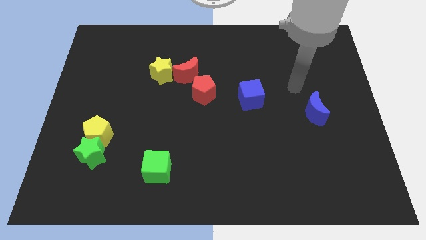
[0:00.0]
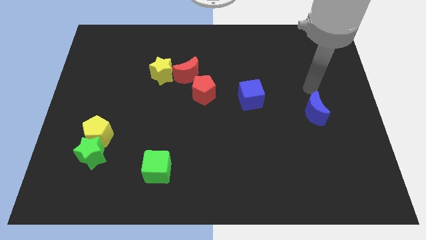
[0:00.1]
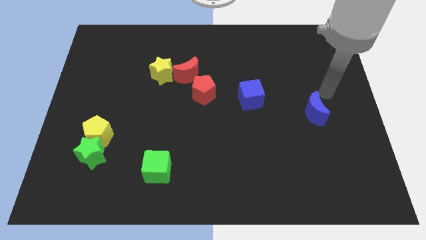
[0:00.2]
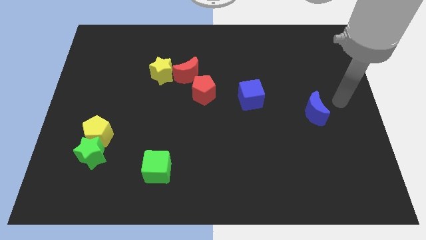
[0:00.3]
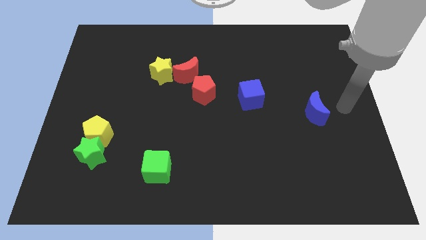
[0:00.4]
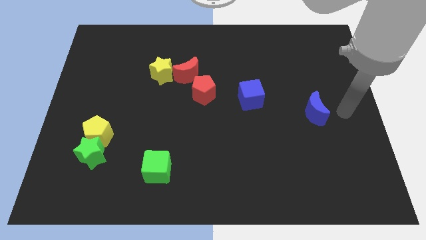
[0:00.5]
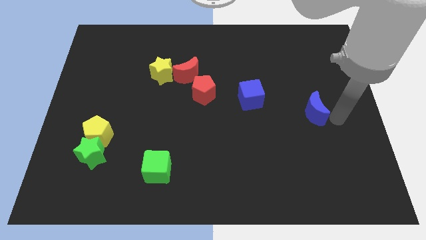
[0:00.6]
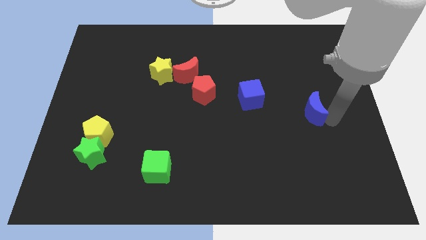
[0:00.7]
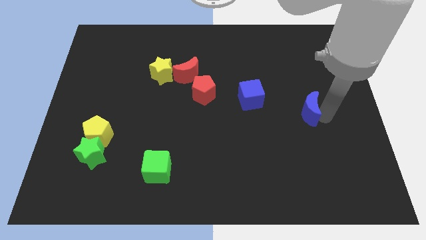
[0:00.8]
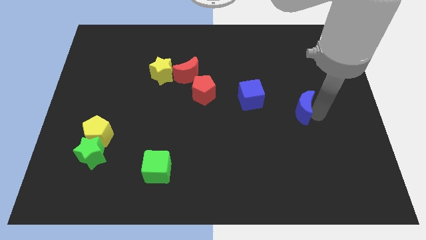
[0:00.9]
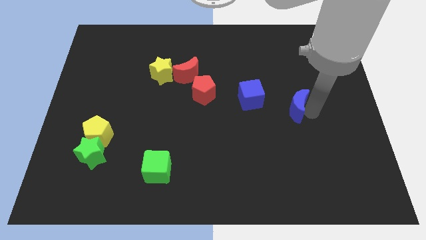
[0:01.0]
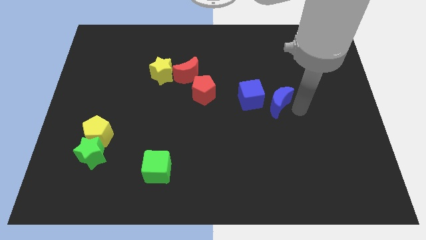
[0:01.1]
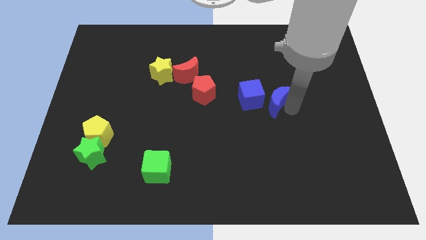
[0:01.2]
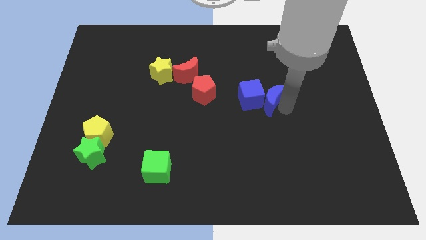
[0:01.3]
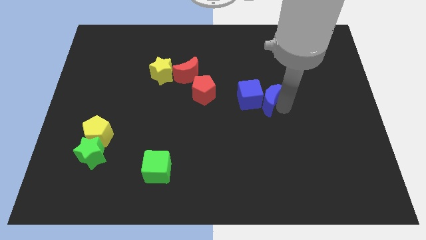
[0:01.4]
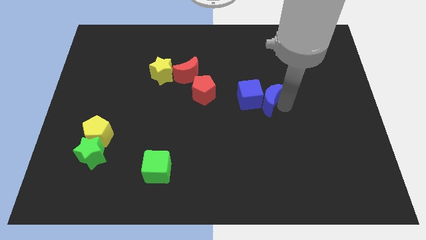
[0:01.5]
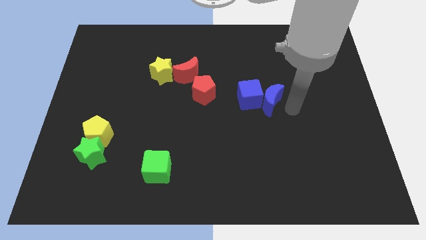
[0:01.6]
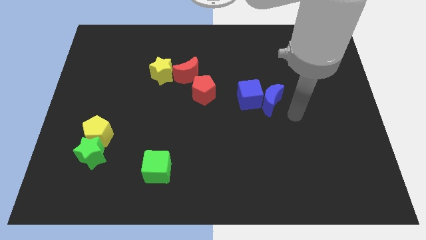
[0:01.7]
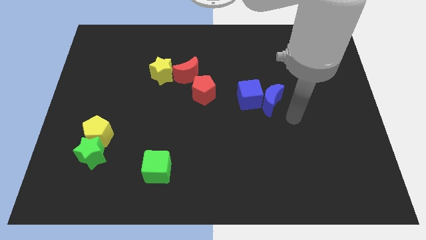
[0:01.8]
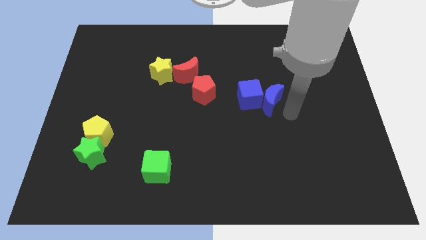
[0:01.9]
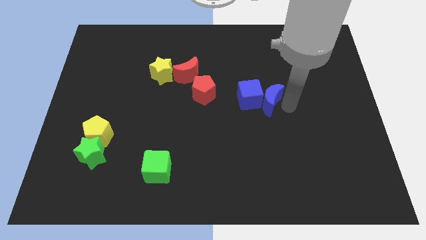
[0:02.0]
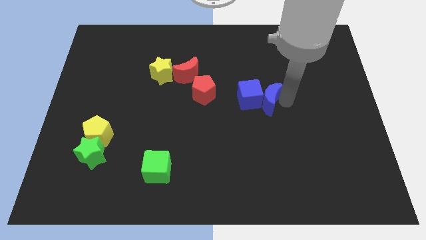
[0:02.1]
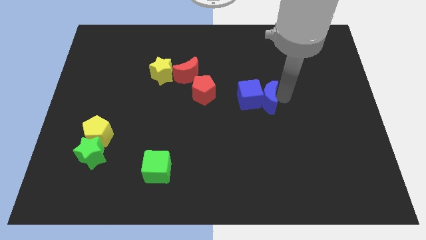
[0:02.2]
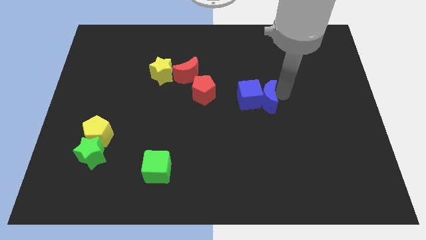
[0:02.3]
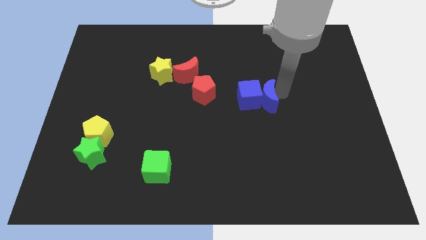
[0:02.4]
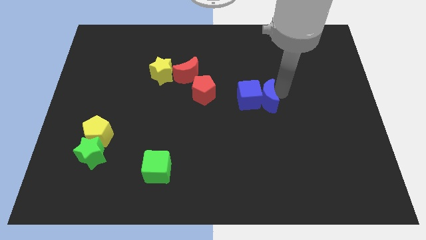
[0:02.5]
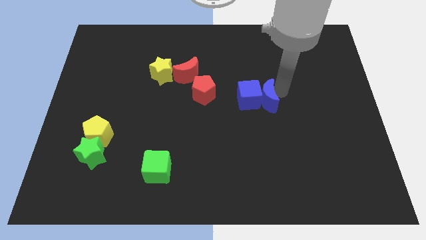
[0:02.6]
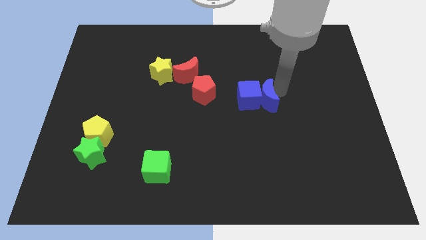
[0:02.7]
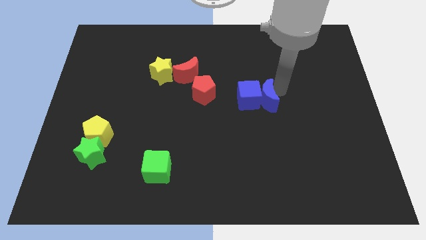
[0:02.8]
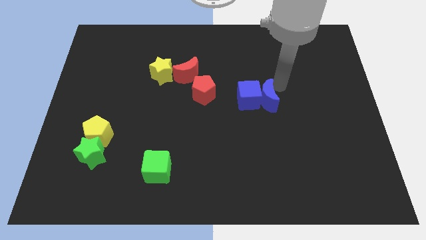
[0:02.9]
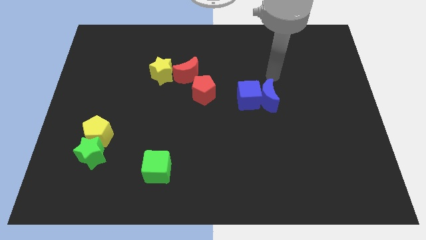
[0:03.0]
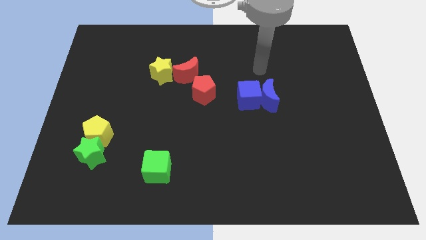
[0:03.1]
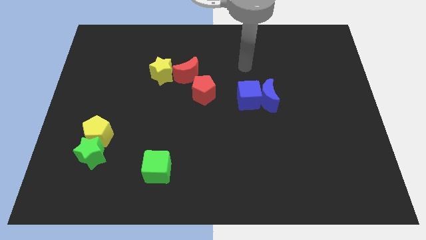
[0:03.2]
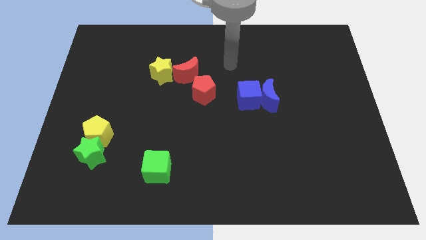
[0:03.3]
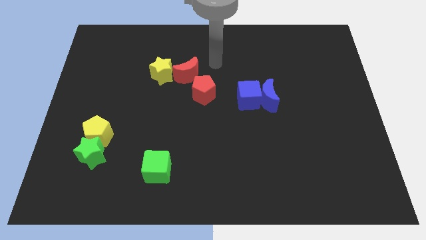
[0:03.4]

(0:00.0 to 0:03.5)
push the blue crescent right to the blue cube

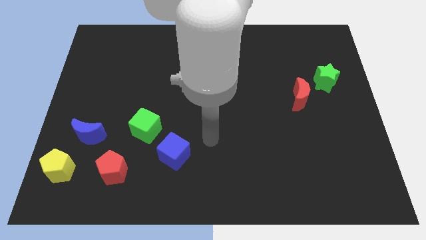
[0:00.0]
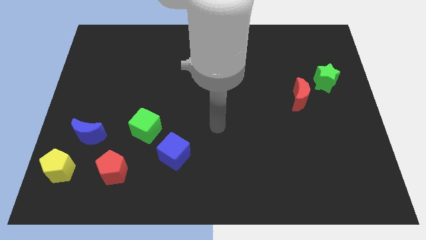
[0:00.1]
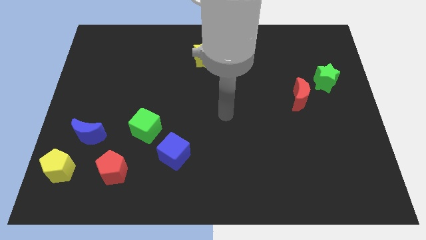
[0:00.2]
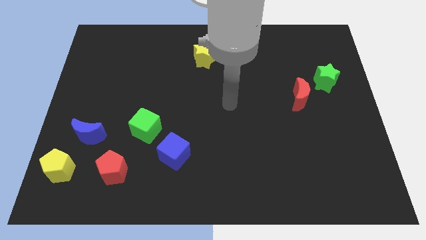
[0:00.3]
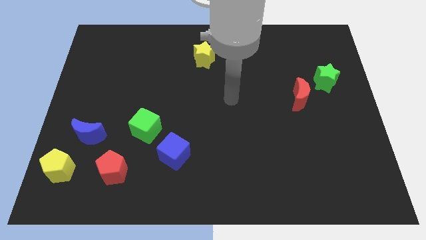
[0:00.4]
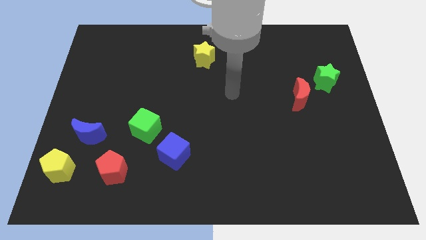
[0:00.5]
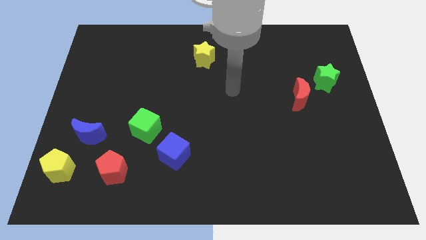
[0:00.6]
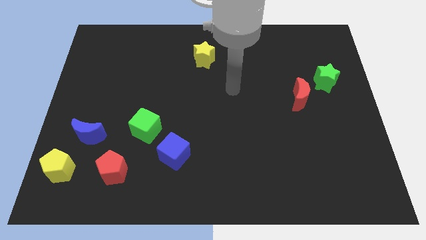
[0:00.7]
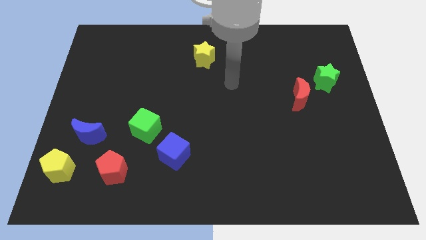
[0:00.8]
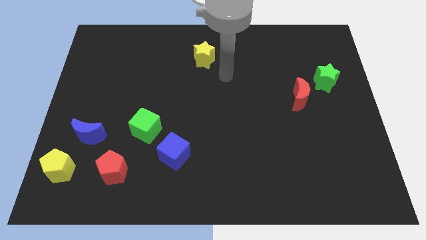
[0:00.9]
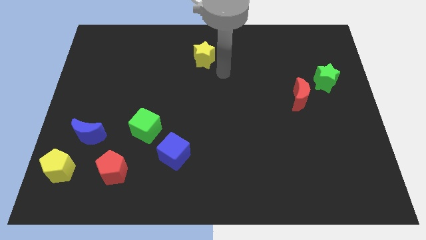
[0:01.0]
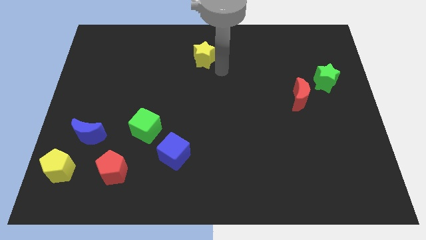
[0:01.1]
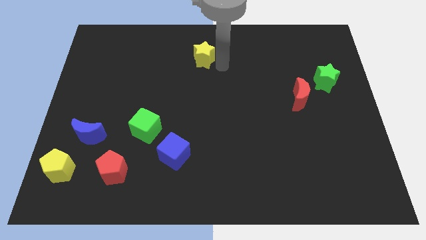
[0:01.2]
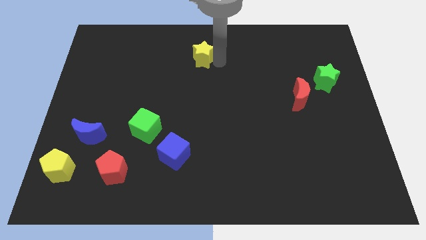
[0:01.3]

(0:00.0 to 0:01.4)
point the arm to the right of the yellow star

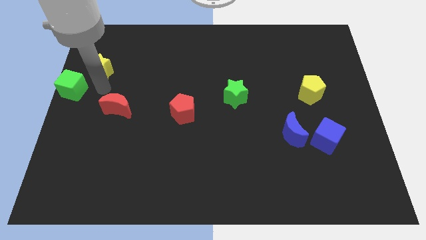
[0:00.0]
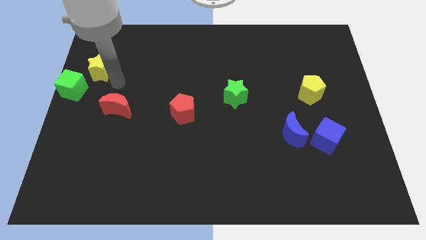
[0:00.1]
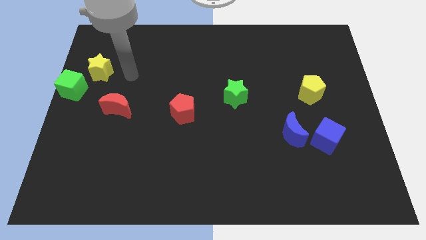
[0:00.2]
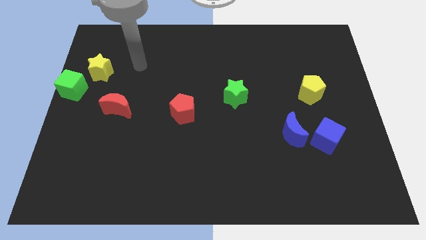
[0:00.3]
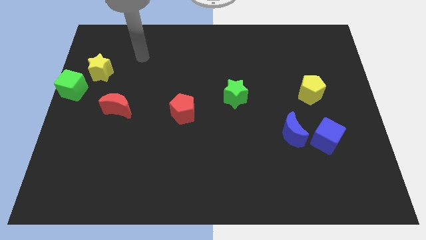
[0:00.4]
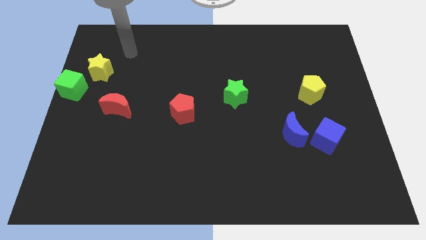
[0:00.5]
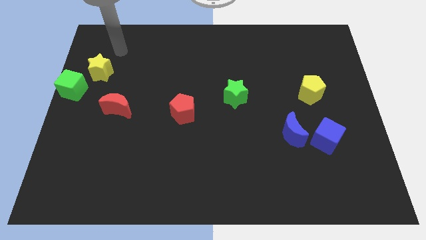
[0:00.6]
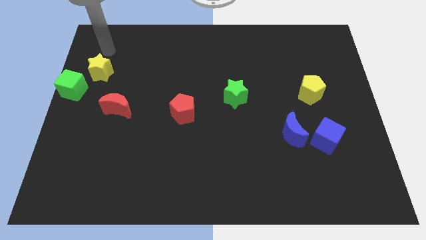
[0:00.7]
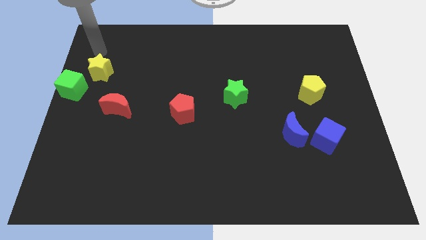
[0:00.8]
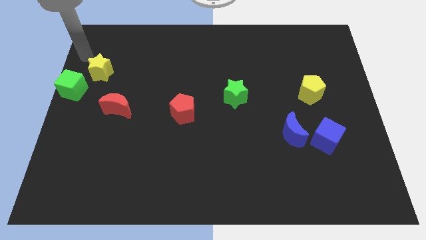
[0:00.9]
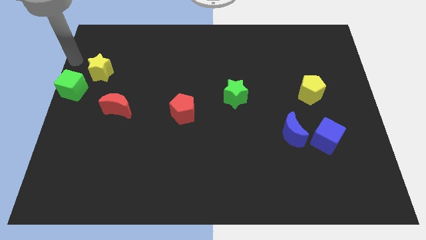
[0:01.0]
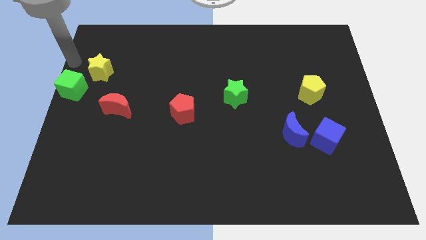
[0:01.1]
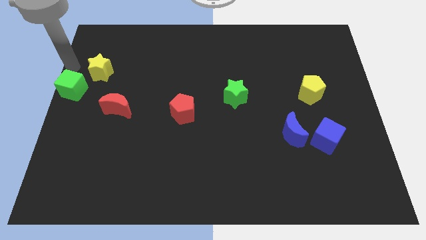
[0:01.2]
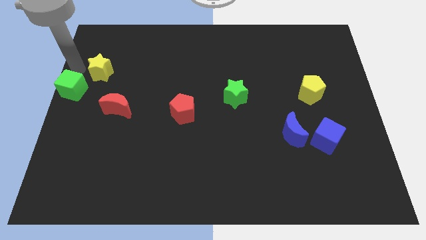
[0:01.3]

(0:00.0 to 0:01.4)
point your arm at the top of the green cube

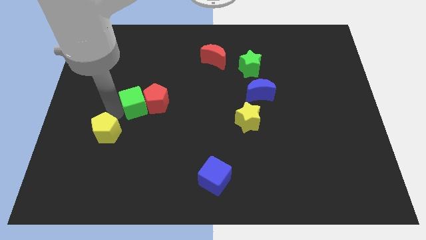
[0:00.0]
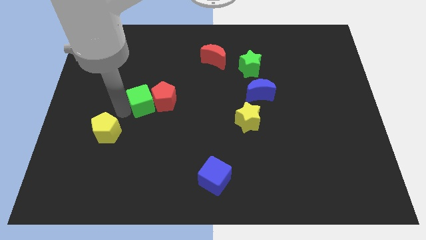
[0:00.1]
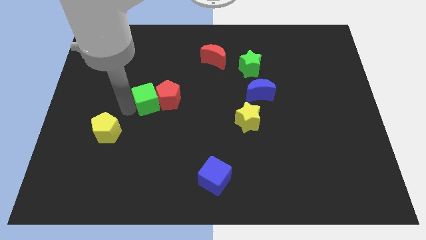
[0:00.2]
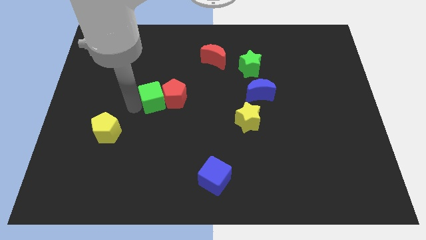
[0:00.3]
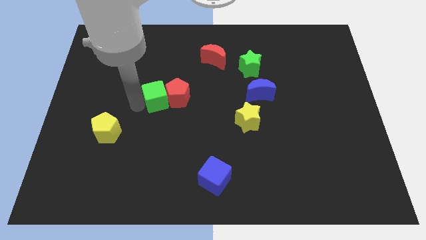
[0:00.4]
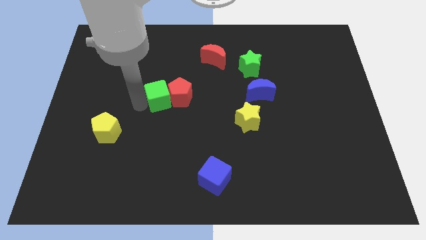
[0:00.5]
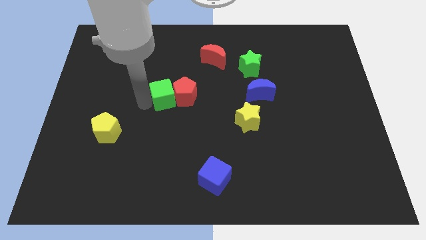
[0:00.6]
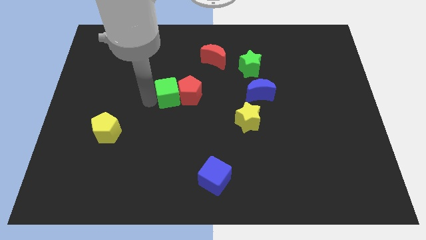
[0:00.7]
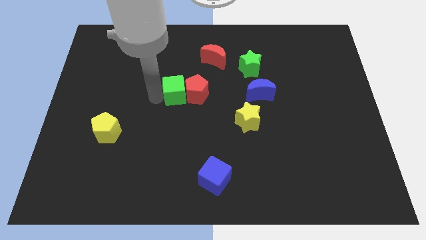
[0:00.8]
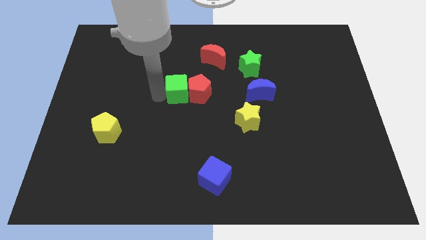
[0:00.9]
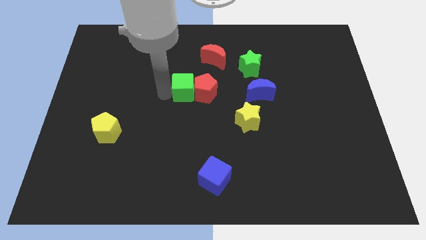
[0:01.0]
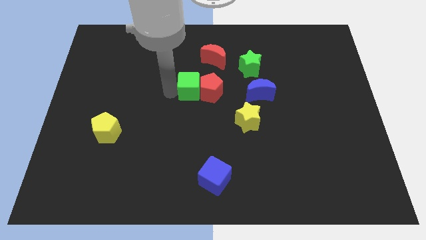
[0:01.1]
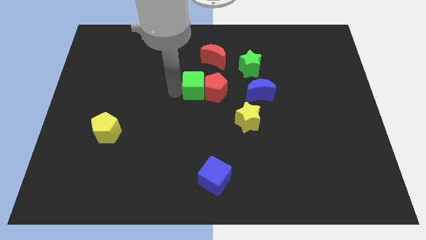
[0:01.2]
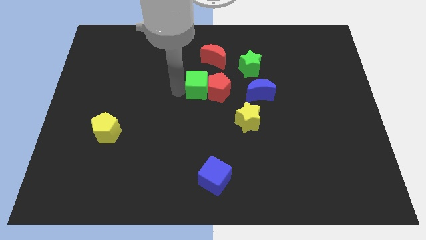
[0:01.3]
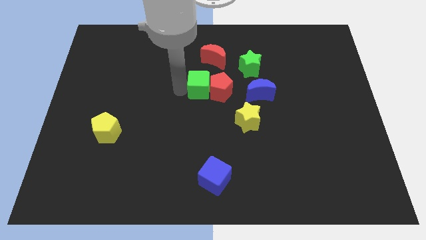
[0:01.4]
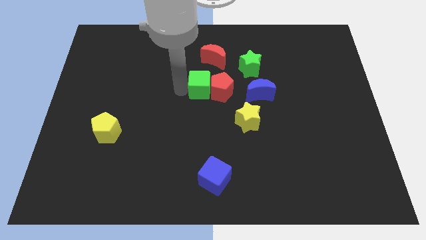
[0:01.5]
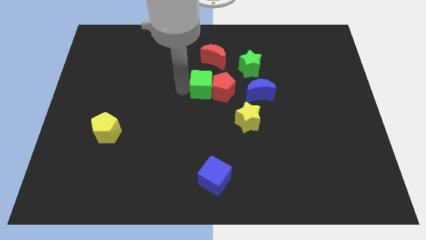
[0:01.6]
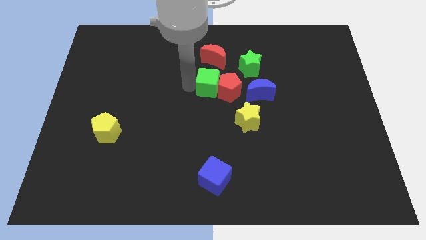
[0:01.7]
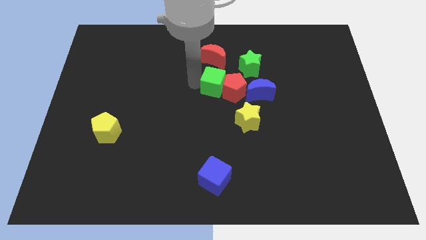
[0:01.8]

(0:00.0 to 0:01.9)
push the green cube and red pentagon towards the right

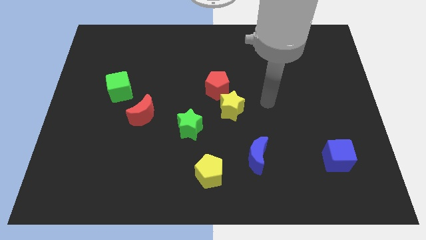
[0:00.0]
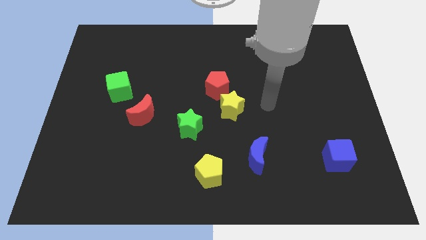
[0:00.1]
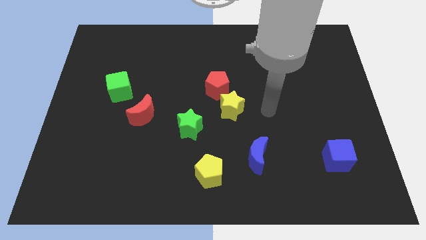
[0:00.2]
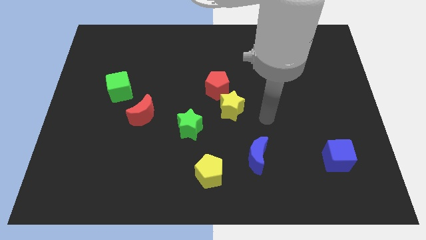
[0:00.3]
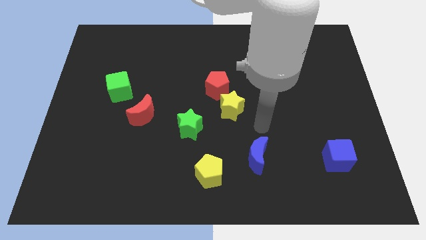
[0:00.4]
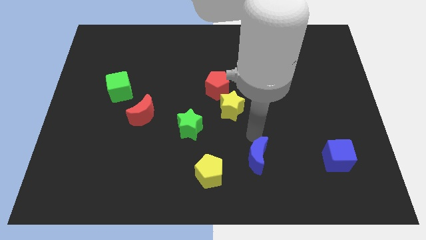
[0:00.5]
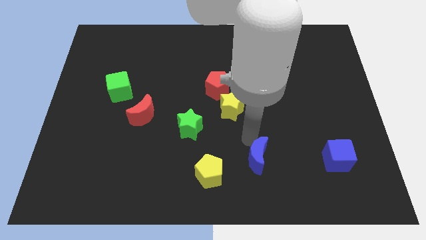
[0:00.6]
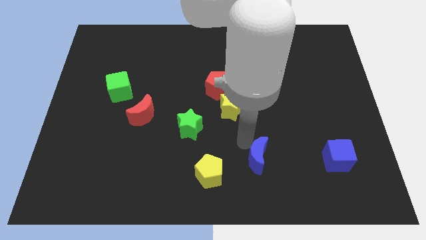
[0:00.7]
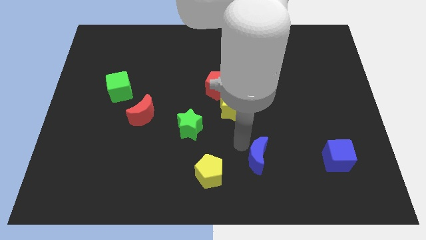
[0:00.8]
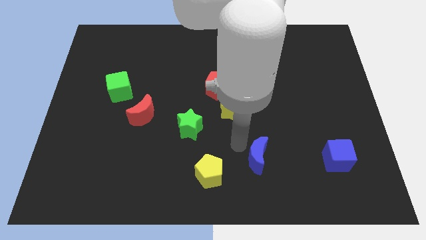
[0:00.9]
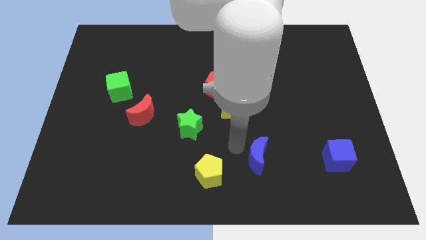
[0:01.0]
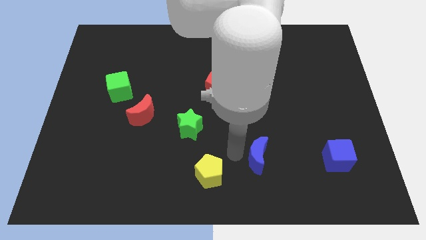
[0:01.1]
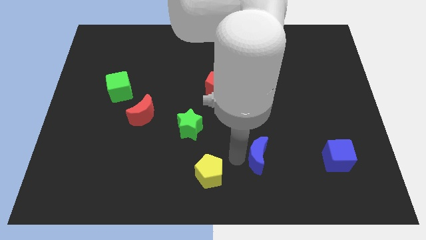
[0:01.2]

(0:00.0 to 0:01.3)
push arm in between blue moon and yellow pentagon
